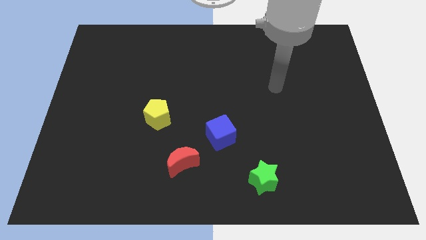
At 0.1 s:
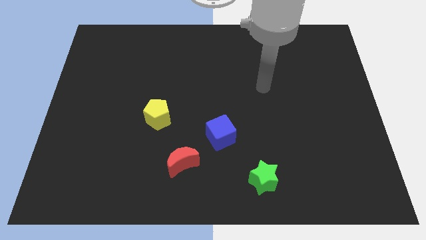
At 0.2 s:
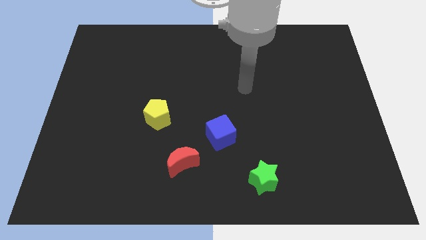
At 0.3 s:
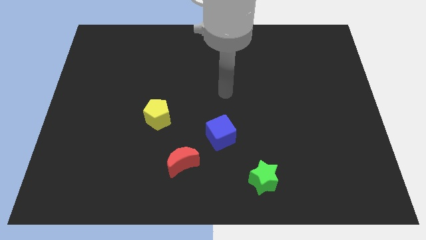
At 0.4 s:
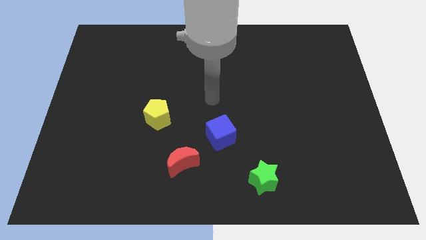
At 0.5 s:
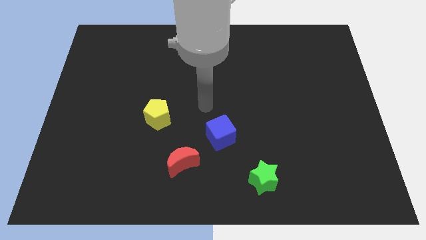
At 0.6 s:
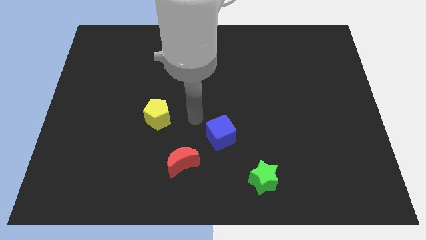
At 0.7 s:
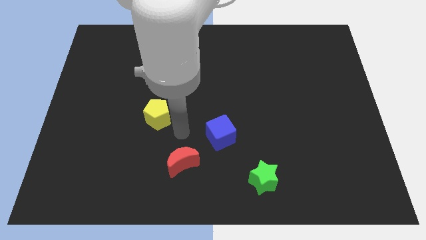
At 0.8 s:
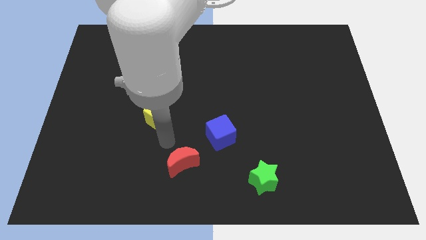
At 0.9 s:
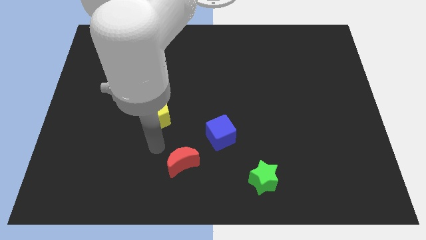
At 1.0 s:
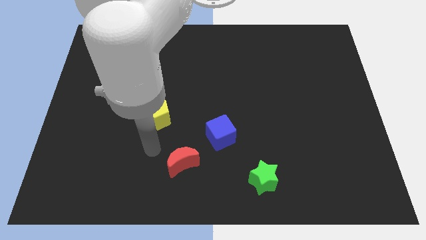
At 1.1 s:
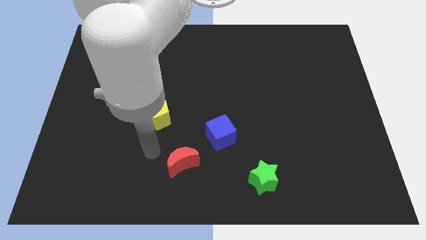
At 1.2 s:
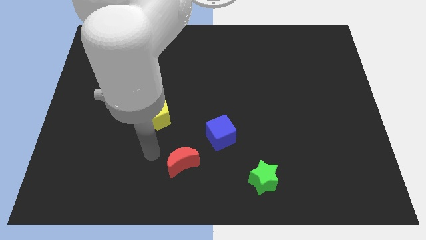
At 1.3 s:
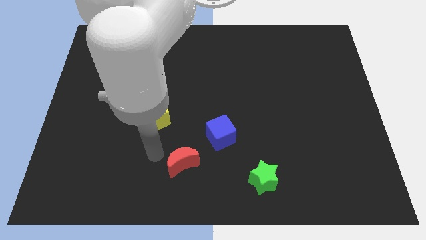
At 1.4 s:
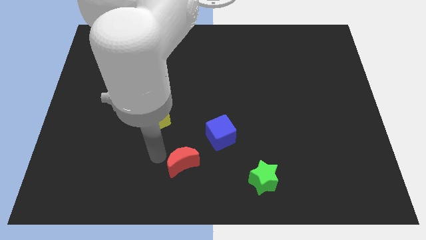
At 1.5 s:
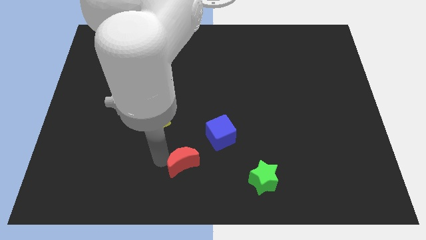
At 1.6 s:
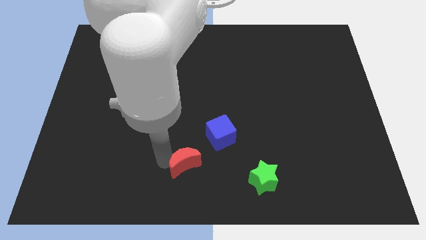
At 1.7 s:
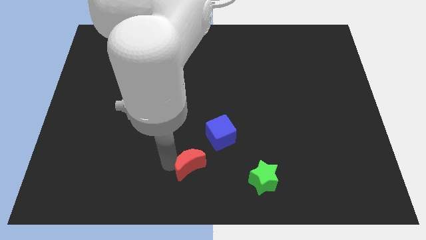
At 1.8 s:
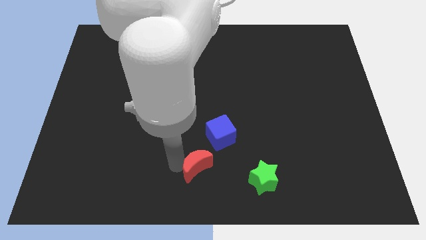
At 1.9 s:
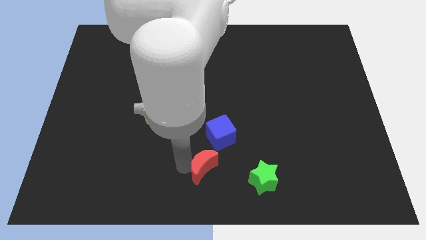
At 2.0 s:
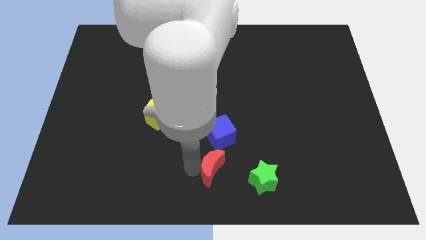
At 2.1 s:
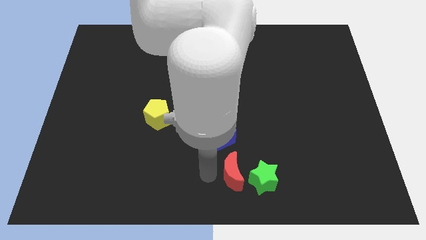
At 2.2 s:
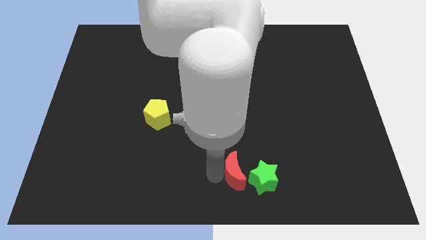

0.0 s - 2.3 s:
slide the moon next to the green star

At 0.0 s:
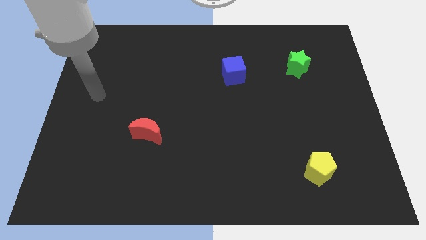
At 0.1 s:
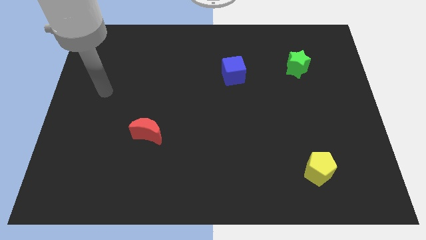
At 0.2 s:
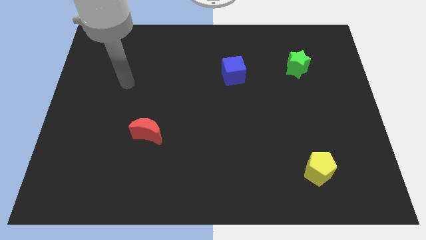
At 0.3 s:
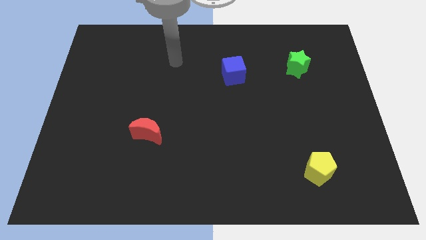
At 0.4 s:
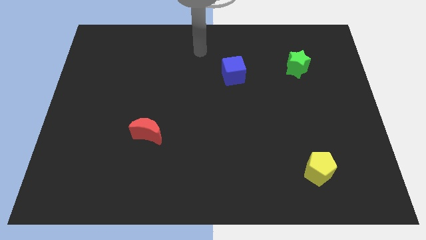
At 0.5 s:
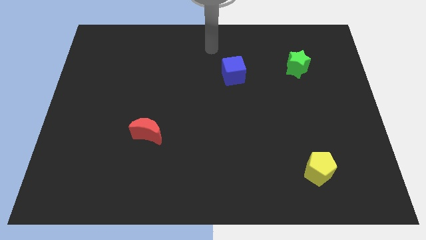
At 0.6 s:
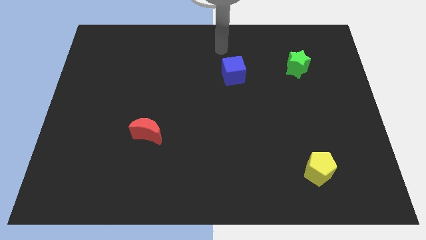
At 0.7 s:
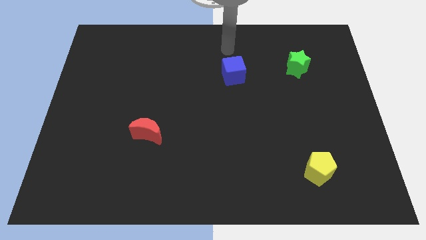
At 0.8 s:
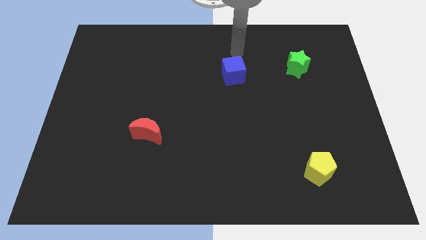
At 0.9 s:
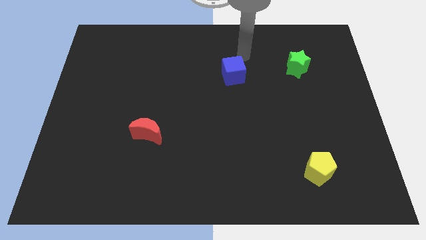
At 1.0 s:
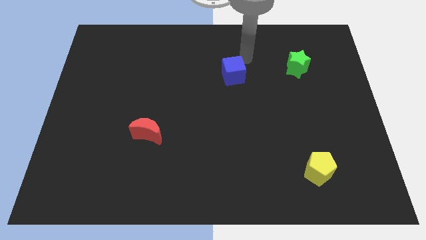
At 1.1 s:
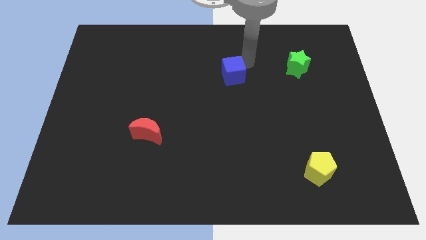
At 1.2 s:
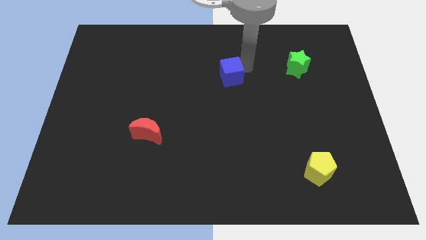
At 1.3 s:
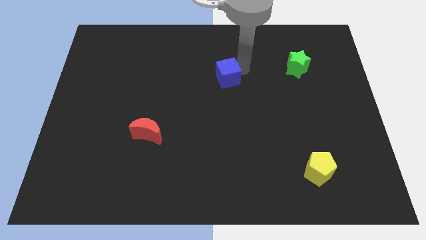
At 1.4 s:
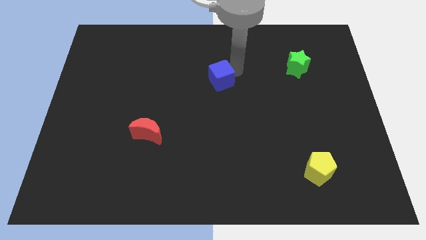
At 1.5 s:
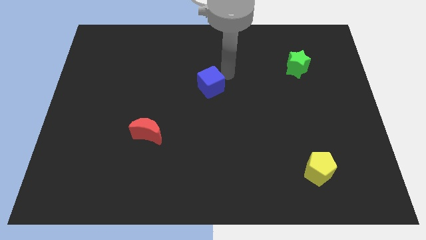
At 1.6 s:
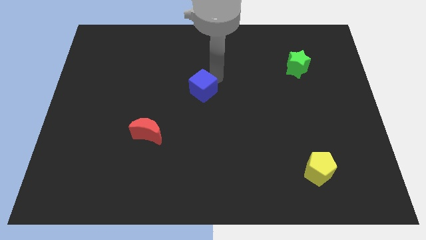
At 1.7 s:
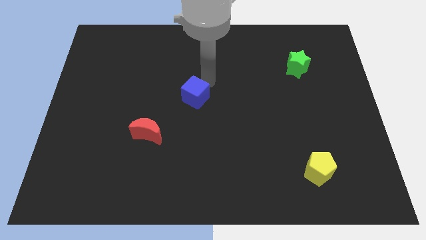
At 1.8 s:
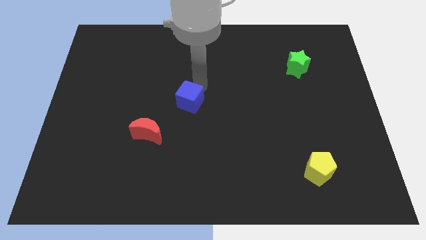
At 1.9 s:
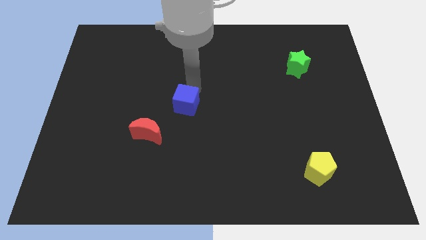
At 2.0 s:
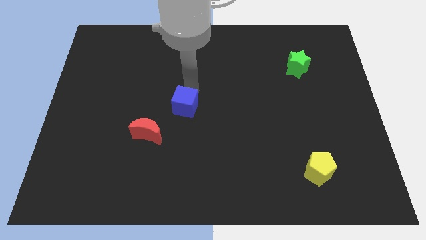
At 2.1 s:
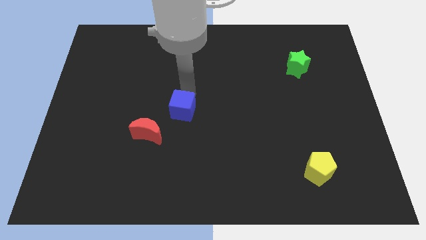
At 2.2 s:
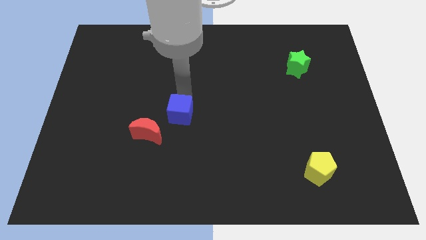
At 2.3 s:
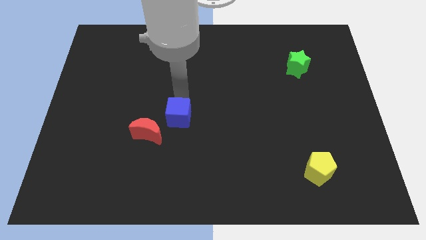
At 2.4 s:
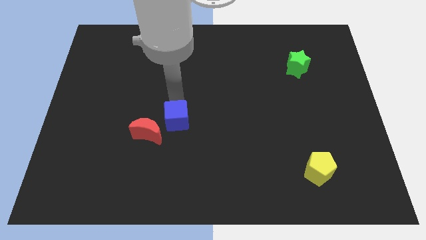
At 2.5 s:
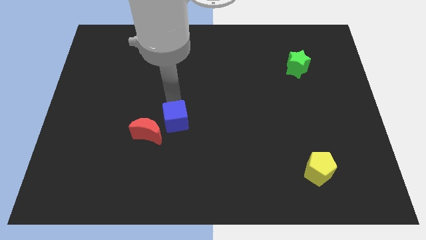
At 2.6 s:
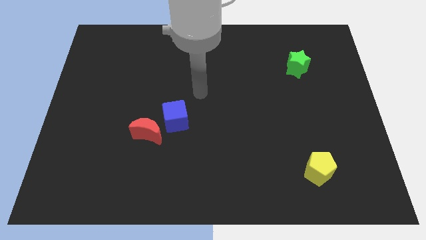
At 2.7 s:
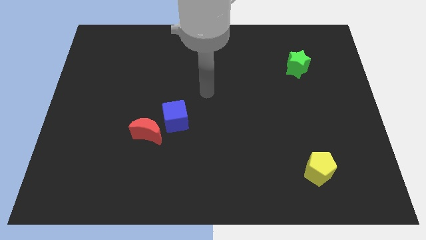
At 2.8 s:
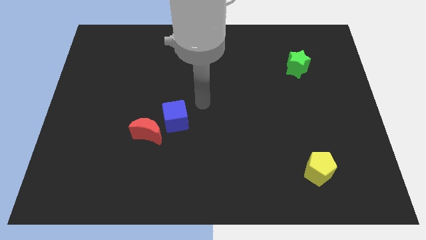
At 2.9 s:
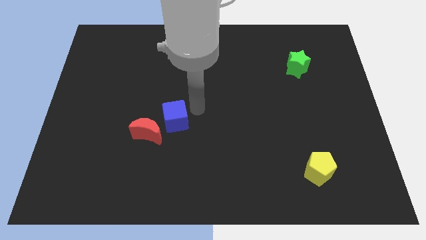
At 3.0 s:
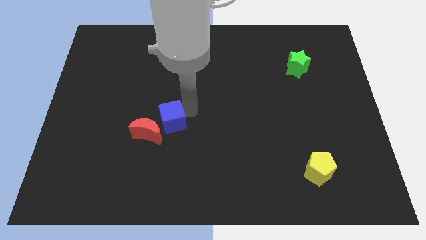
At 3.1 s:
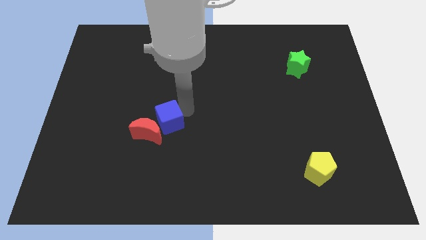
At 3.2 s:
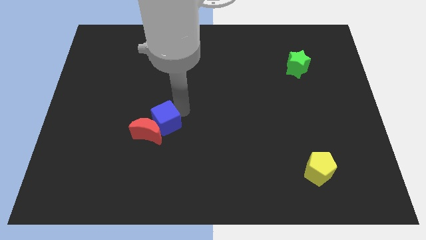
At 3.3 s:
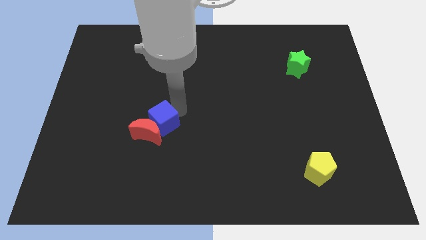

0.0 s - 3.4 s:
push the blue block towards the moon

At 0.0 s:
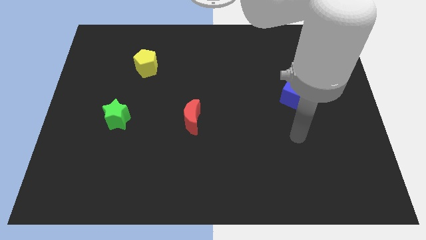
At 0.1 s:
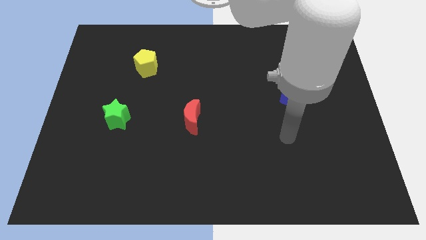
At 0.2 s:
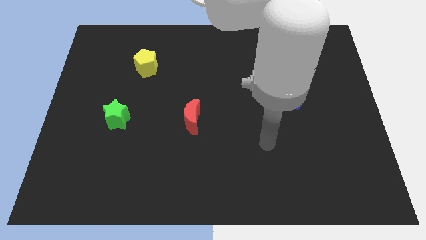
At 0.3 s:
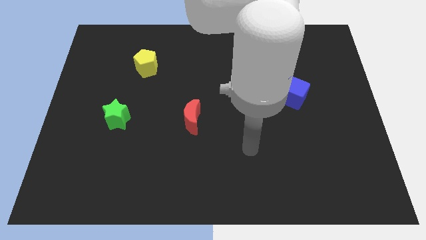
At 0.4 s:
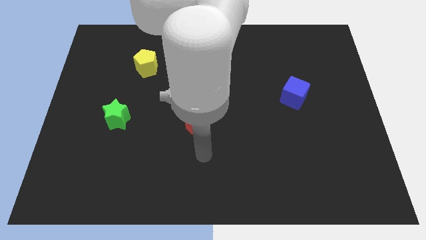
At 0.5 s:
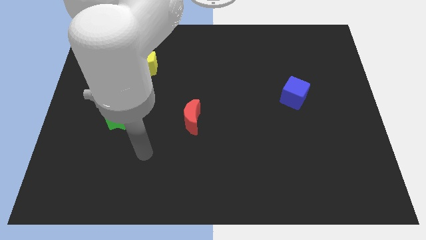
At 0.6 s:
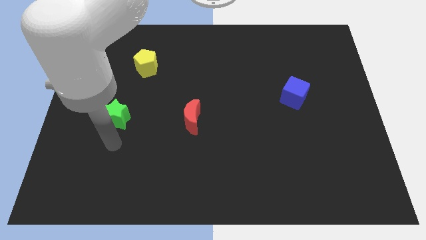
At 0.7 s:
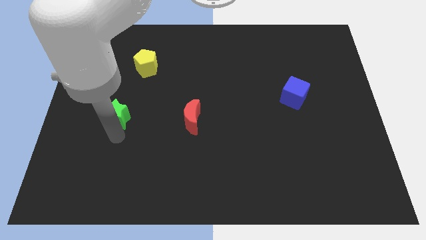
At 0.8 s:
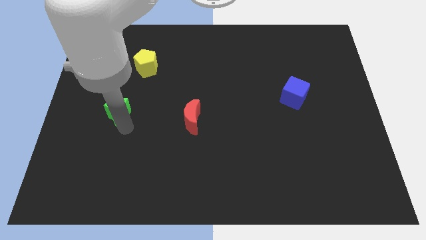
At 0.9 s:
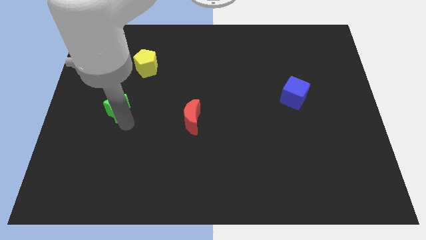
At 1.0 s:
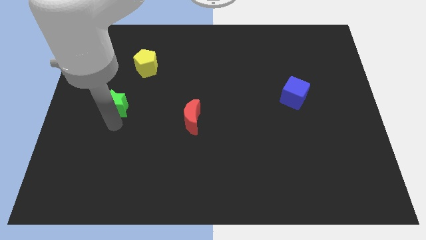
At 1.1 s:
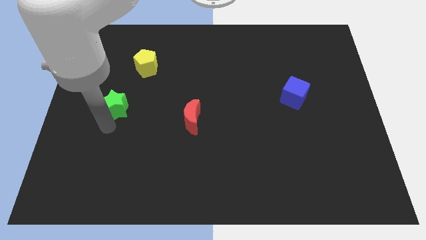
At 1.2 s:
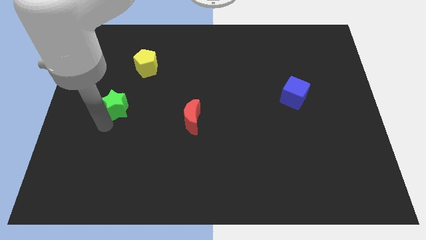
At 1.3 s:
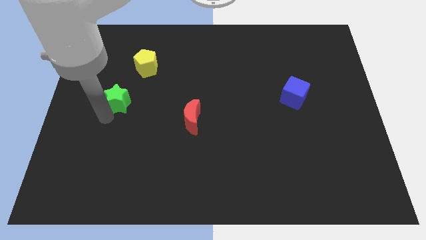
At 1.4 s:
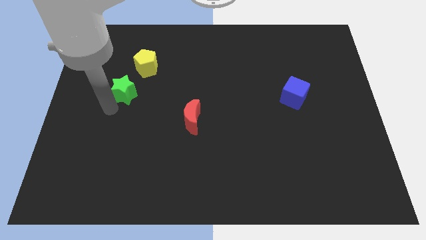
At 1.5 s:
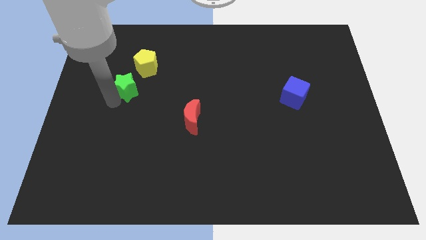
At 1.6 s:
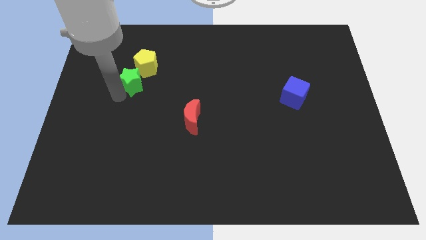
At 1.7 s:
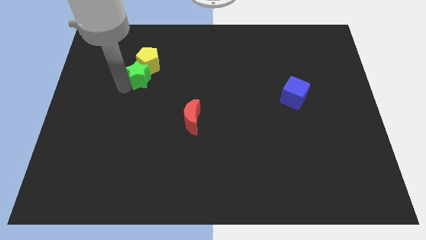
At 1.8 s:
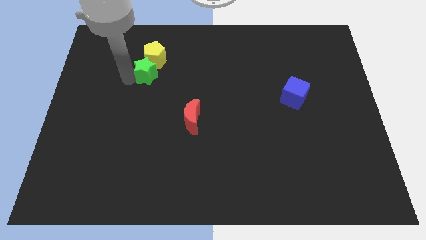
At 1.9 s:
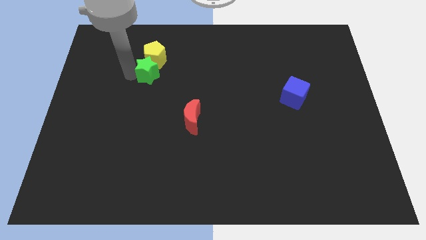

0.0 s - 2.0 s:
put the star close to the yellow block

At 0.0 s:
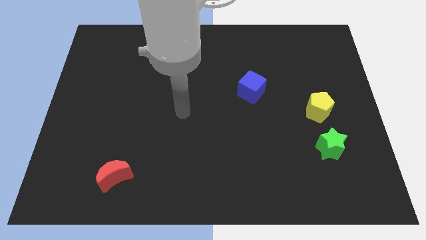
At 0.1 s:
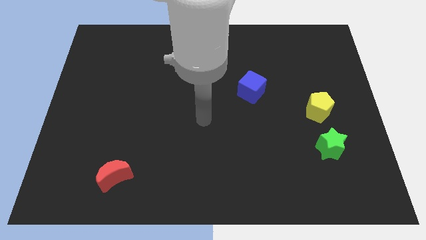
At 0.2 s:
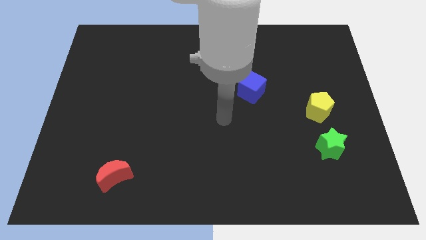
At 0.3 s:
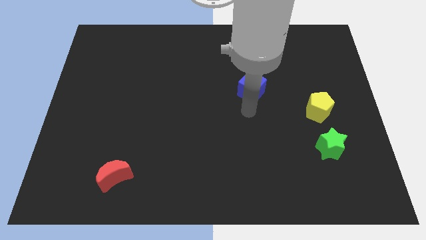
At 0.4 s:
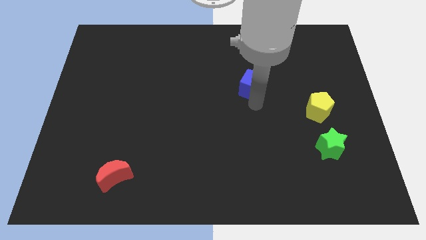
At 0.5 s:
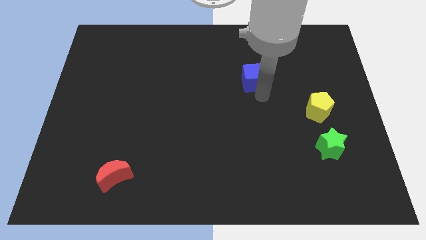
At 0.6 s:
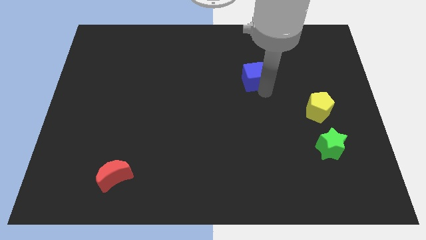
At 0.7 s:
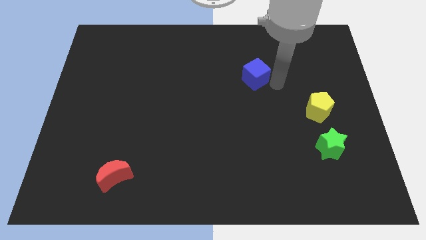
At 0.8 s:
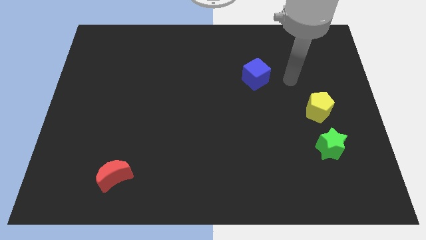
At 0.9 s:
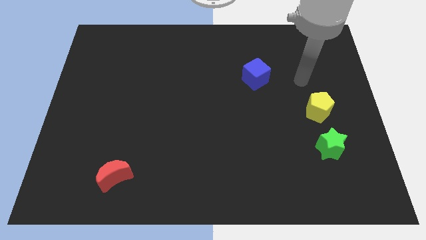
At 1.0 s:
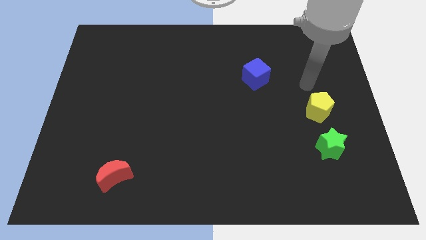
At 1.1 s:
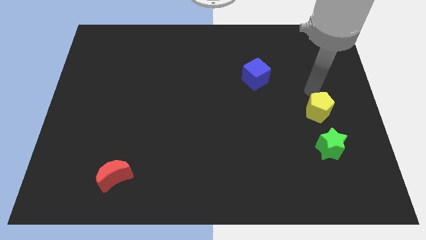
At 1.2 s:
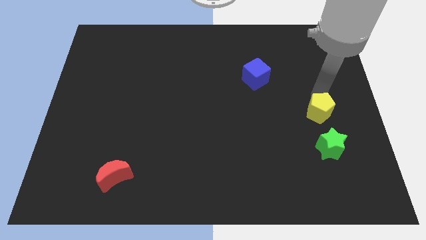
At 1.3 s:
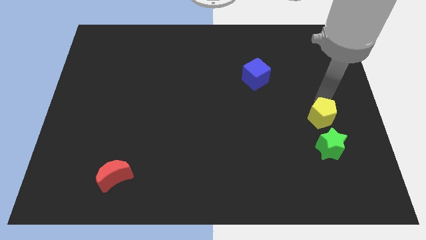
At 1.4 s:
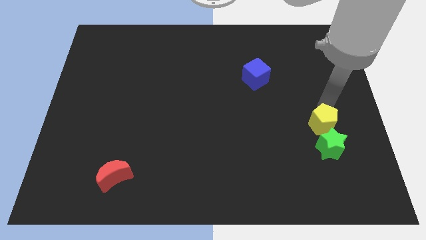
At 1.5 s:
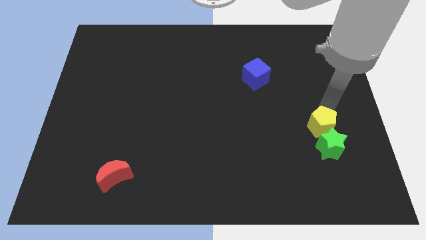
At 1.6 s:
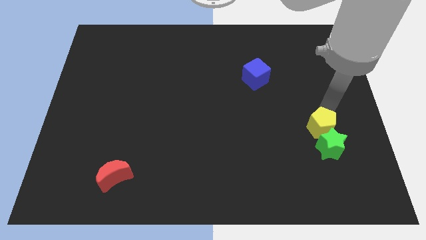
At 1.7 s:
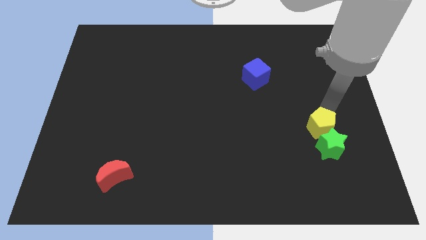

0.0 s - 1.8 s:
slide the yellow pentagon next to the star
